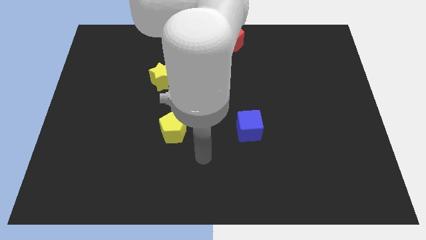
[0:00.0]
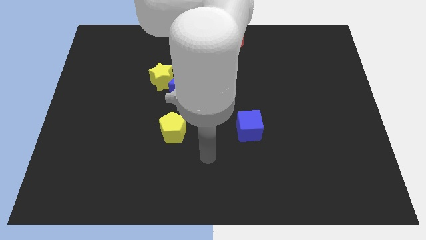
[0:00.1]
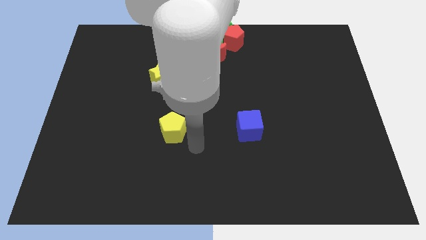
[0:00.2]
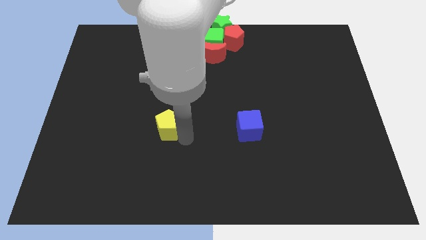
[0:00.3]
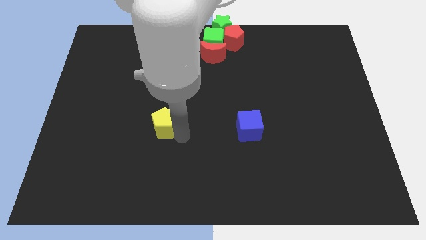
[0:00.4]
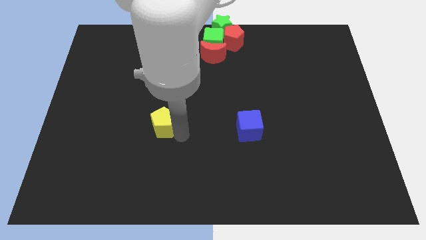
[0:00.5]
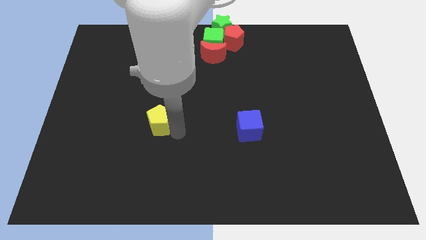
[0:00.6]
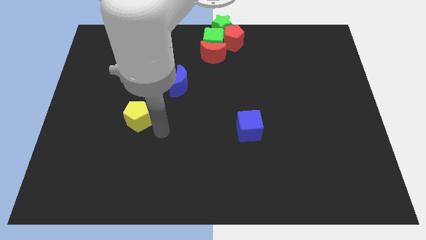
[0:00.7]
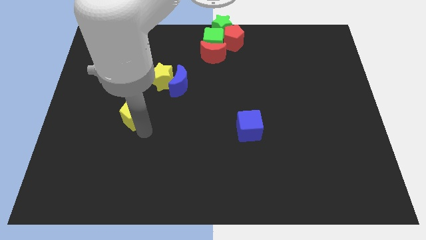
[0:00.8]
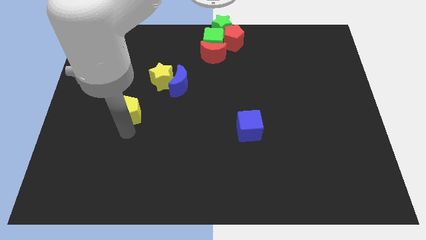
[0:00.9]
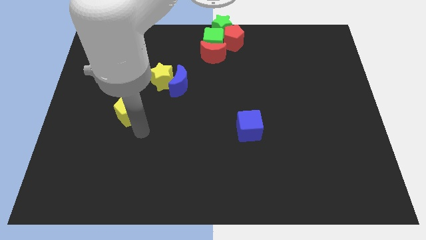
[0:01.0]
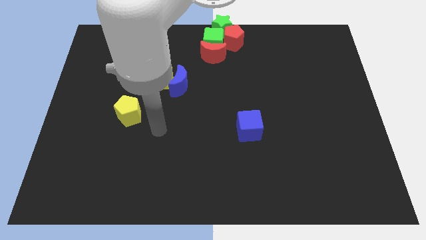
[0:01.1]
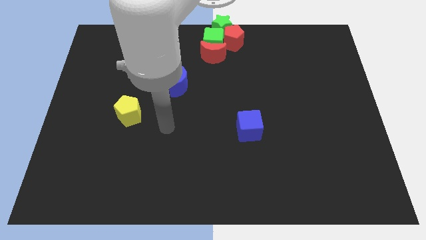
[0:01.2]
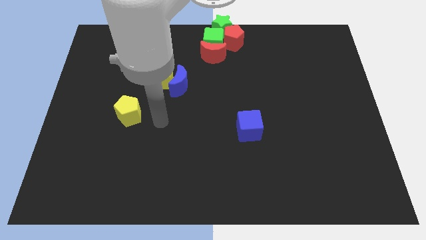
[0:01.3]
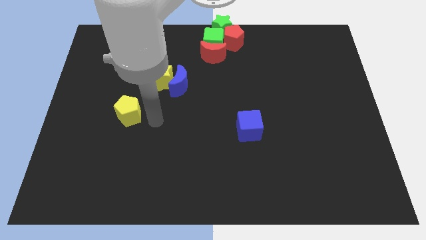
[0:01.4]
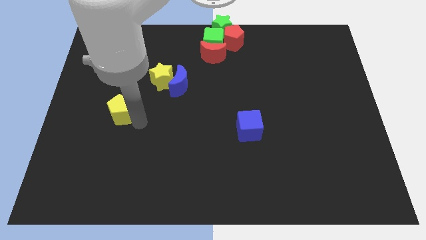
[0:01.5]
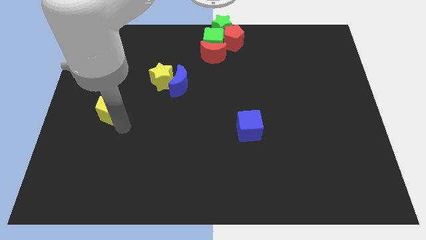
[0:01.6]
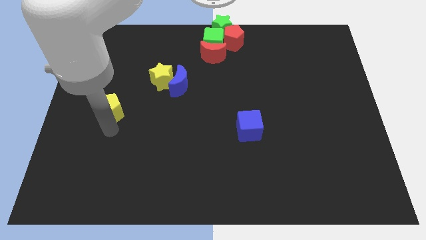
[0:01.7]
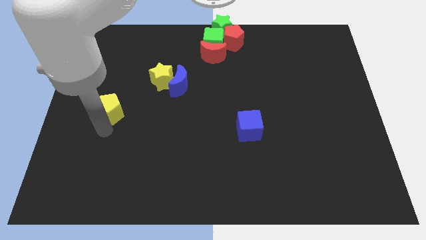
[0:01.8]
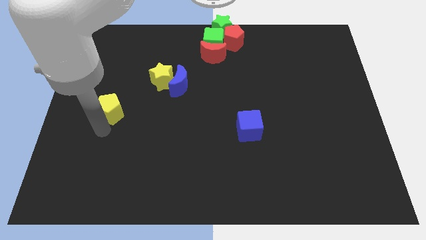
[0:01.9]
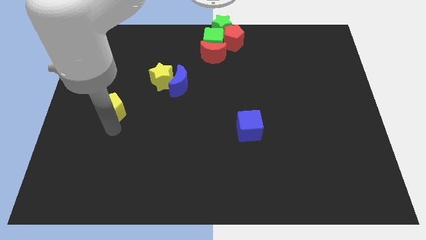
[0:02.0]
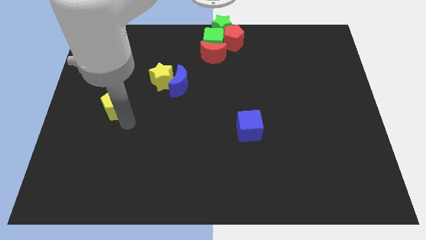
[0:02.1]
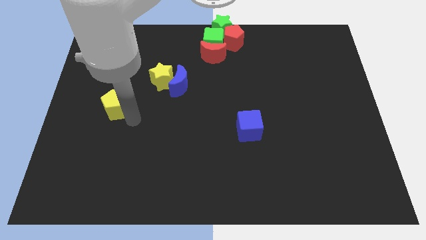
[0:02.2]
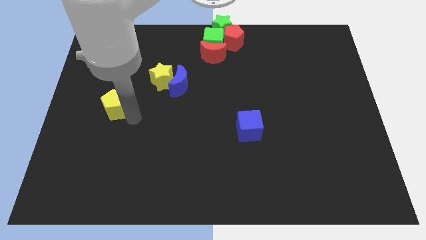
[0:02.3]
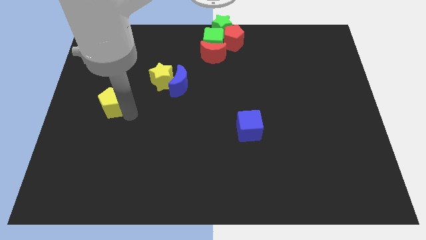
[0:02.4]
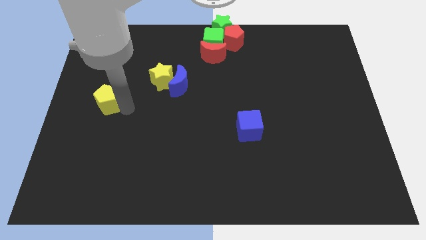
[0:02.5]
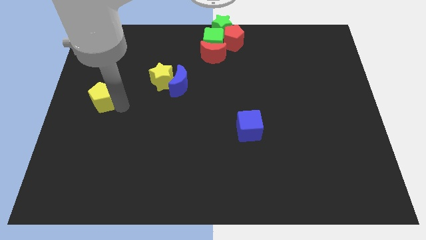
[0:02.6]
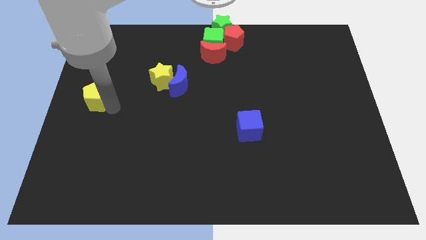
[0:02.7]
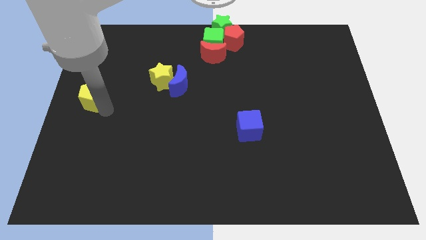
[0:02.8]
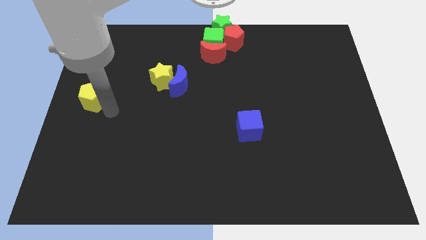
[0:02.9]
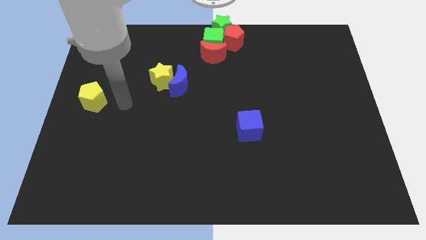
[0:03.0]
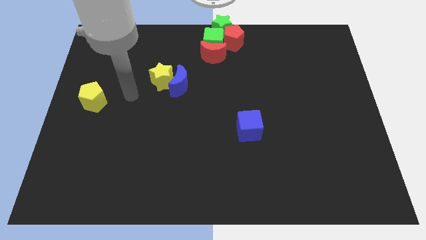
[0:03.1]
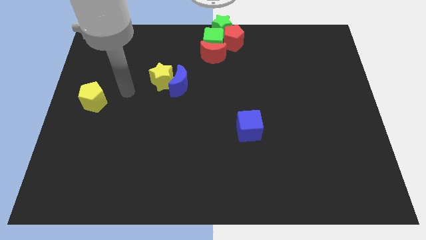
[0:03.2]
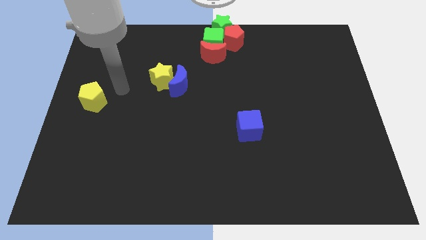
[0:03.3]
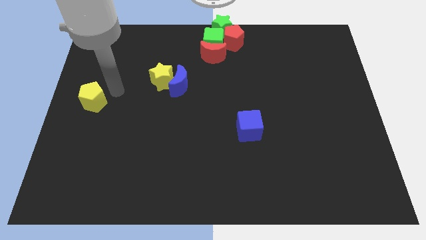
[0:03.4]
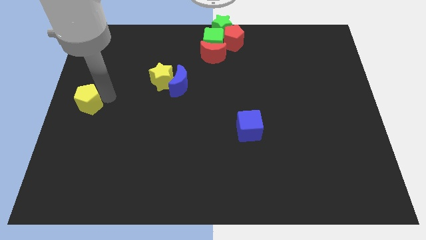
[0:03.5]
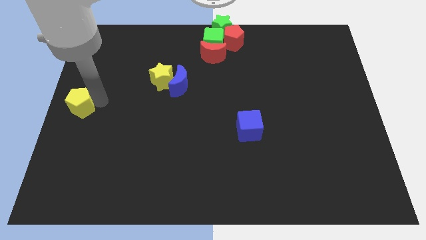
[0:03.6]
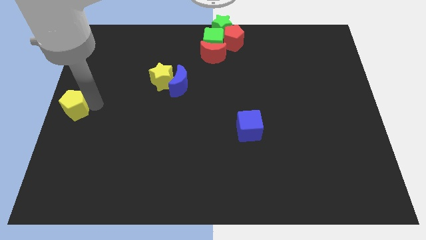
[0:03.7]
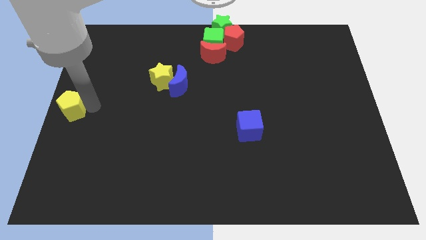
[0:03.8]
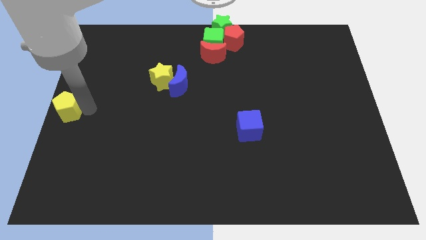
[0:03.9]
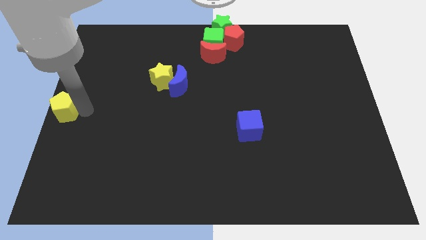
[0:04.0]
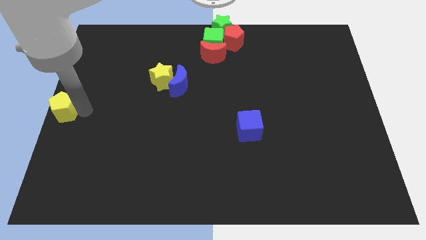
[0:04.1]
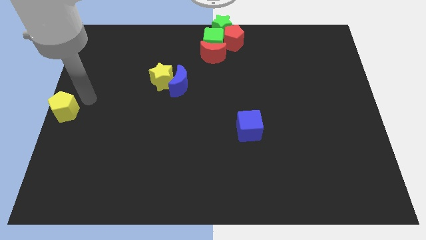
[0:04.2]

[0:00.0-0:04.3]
push the yellow pentagon to the center left

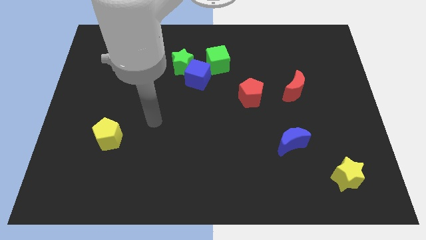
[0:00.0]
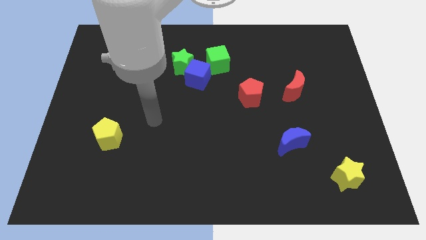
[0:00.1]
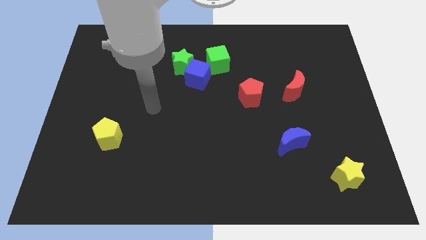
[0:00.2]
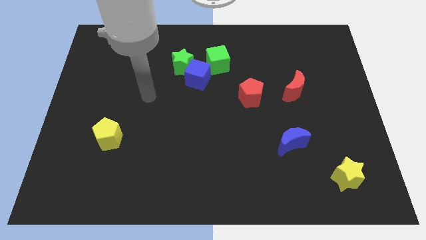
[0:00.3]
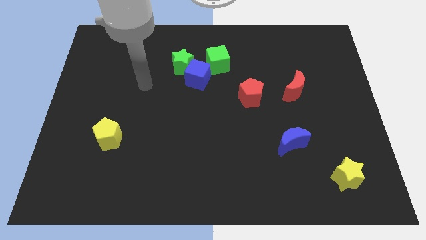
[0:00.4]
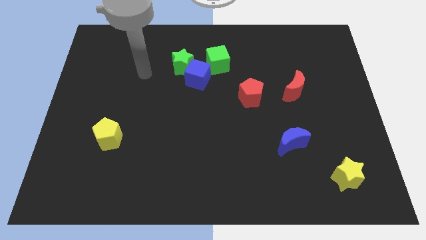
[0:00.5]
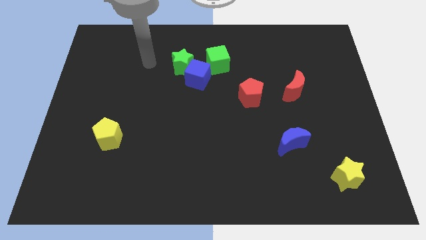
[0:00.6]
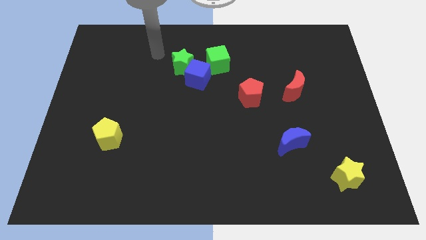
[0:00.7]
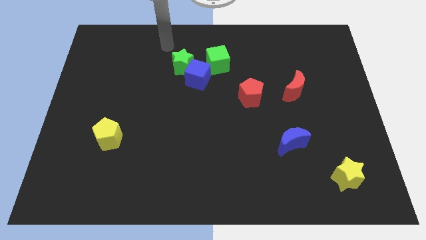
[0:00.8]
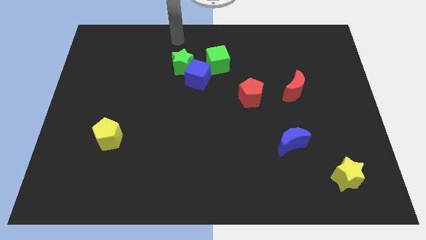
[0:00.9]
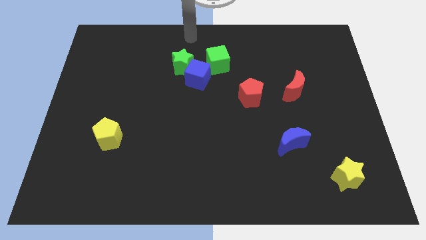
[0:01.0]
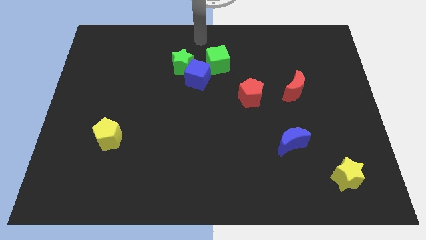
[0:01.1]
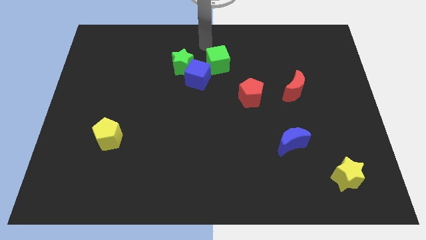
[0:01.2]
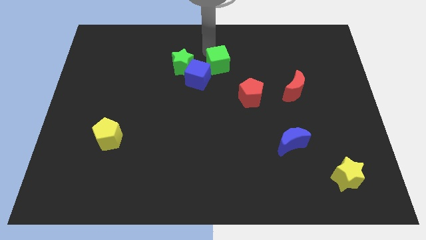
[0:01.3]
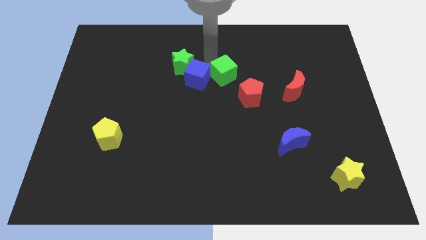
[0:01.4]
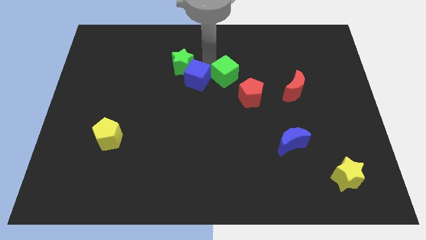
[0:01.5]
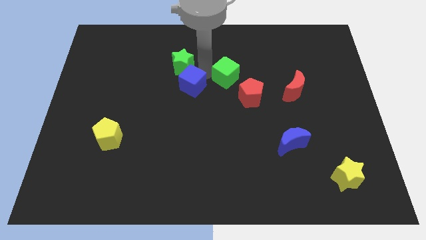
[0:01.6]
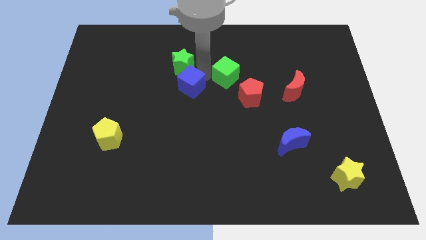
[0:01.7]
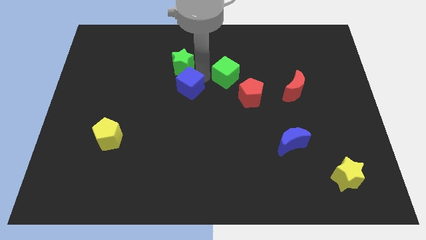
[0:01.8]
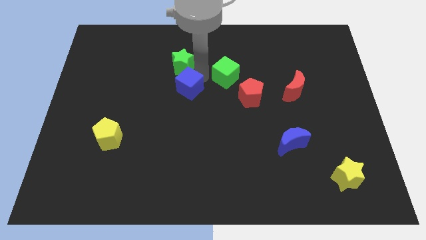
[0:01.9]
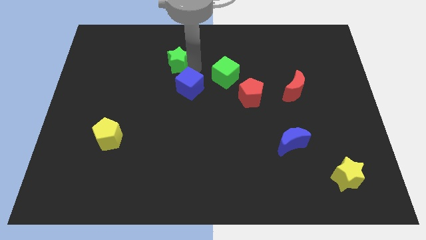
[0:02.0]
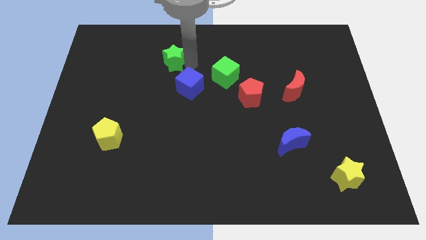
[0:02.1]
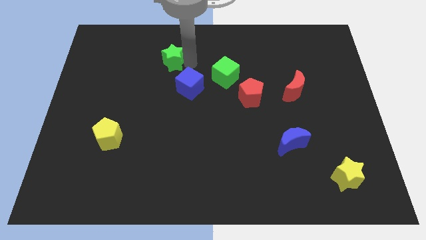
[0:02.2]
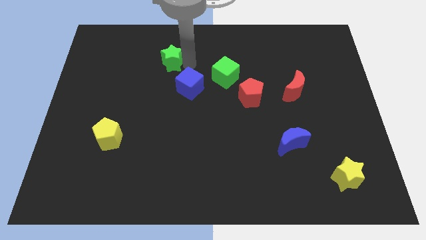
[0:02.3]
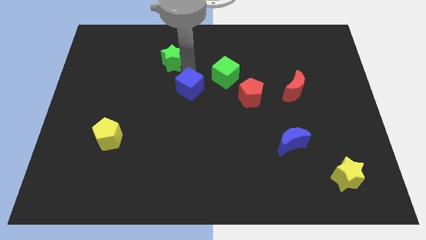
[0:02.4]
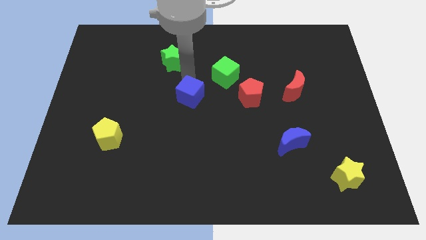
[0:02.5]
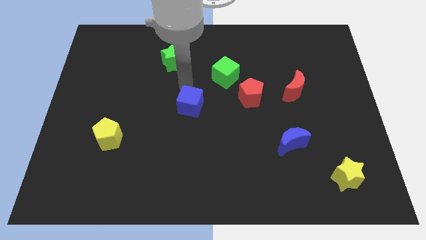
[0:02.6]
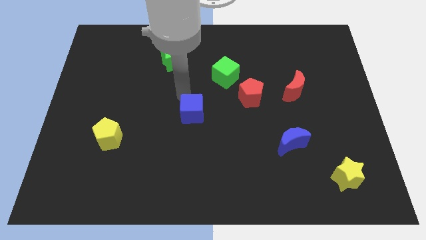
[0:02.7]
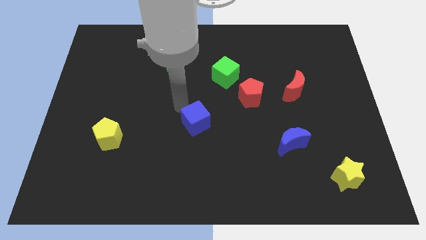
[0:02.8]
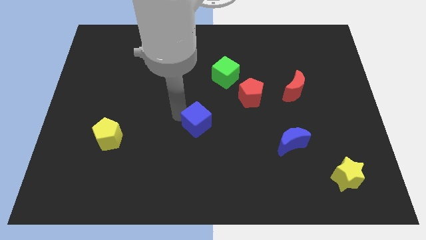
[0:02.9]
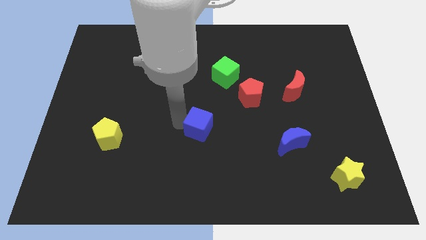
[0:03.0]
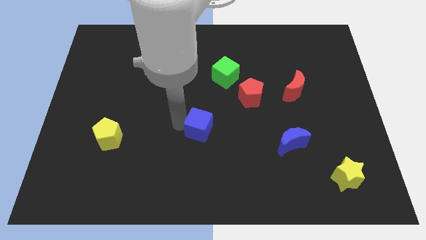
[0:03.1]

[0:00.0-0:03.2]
place the blue cube at center of the board

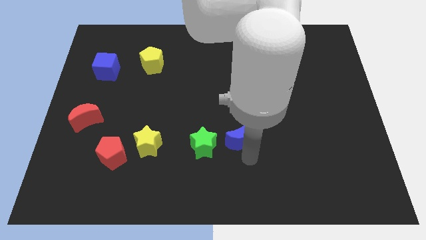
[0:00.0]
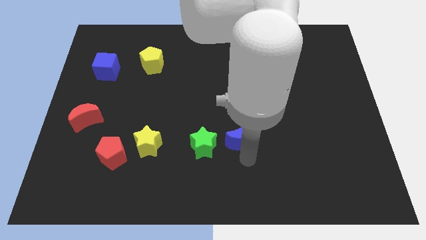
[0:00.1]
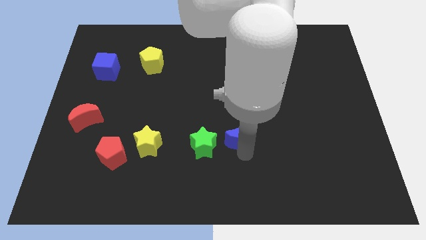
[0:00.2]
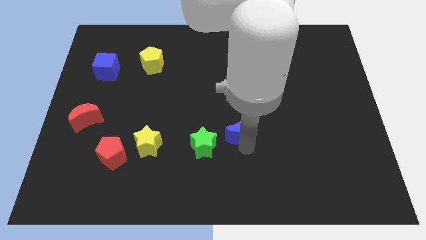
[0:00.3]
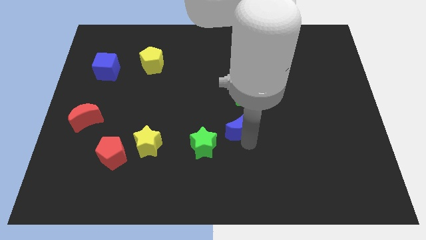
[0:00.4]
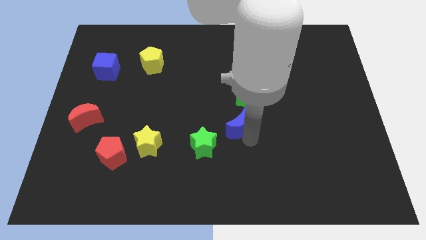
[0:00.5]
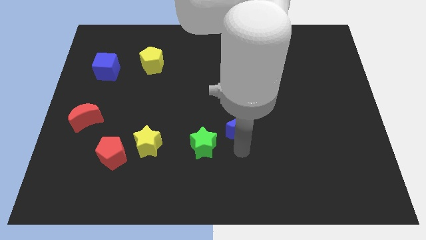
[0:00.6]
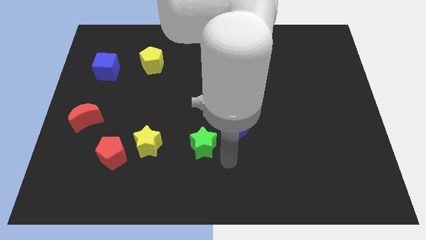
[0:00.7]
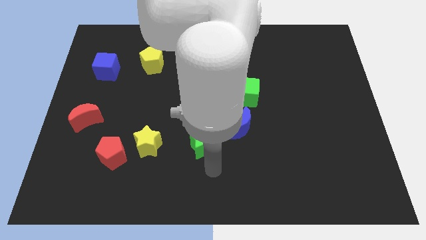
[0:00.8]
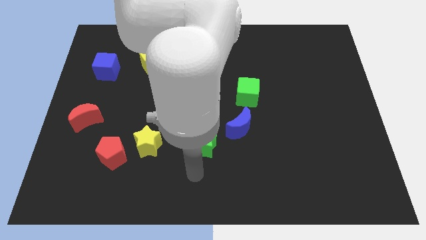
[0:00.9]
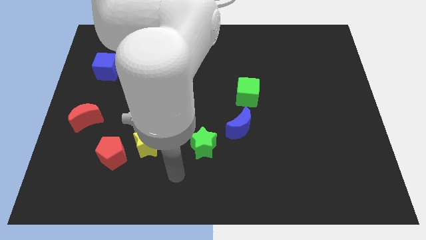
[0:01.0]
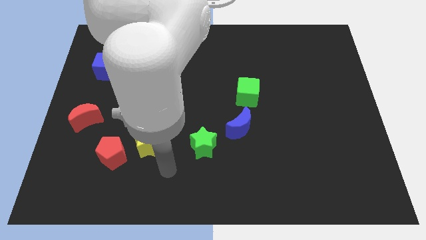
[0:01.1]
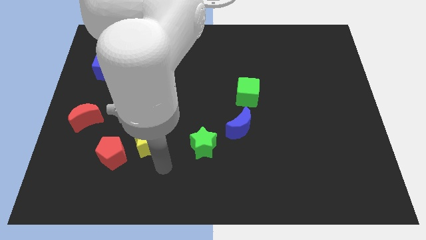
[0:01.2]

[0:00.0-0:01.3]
move the blue crescent below the green cube

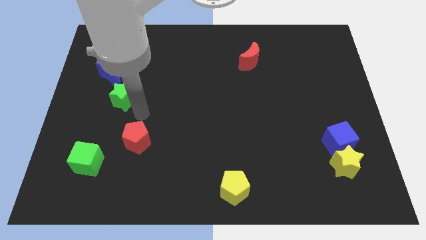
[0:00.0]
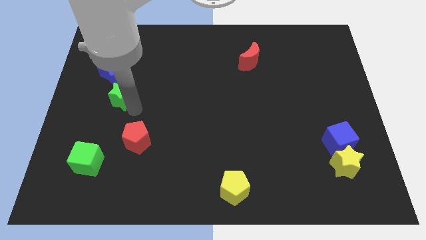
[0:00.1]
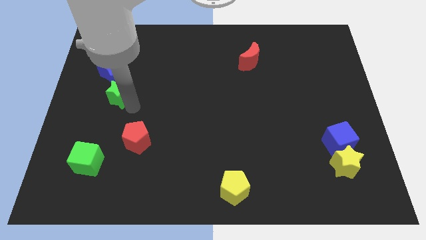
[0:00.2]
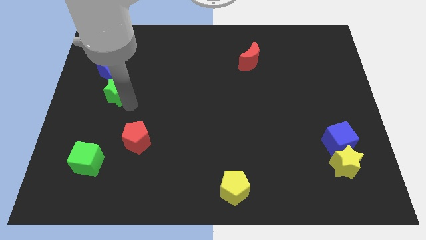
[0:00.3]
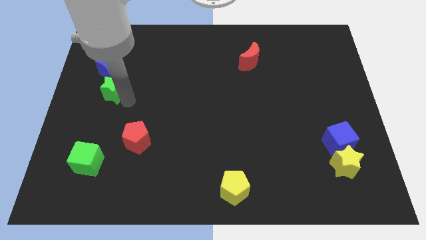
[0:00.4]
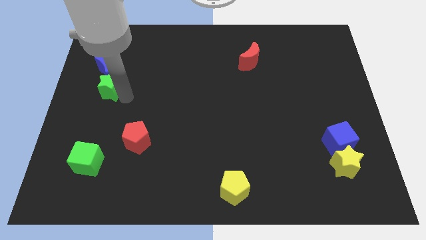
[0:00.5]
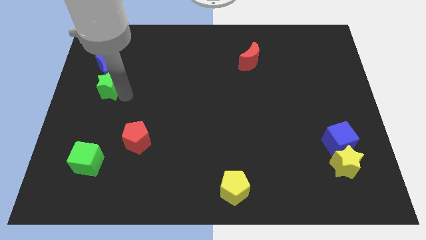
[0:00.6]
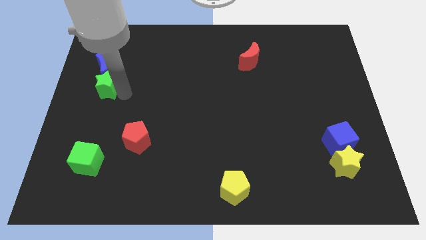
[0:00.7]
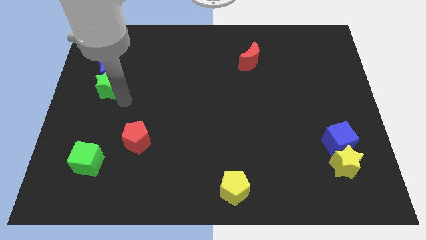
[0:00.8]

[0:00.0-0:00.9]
push the green star into the blue crescent
